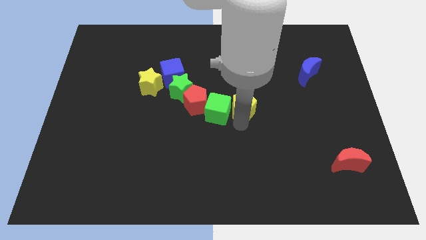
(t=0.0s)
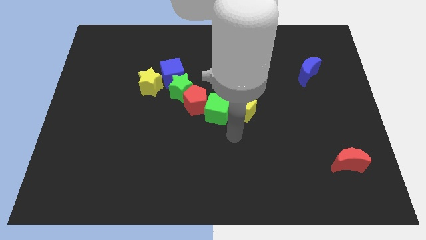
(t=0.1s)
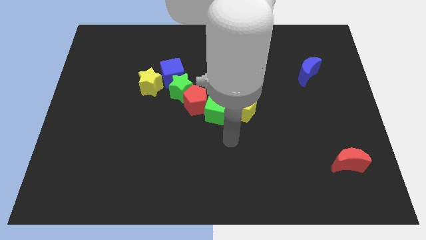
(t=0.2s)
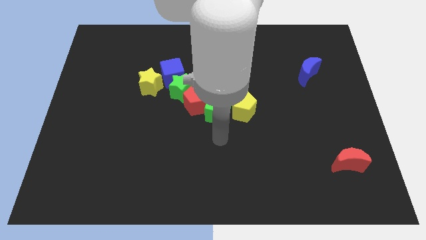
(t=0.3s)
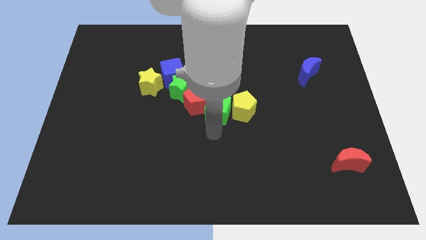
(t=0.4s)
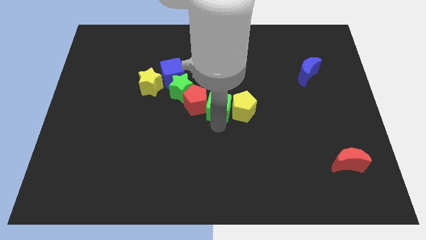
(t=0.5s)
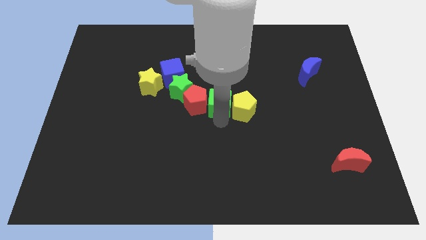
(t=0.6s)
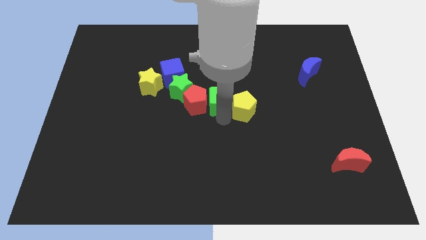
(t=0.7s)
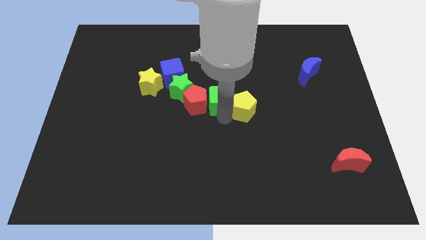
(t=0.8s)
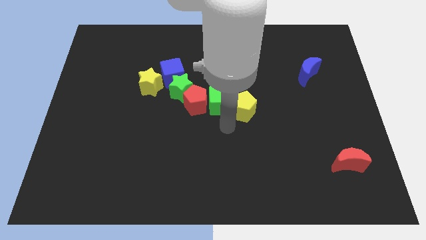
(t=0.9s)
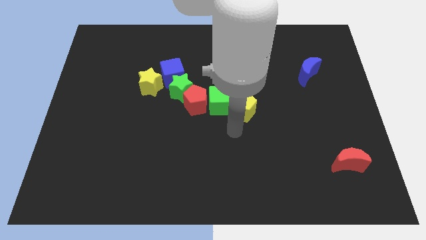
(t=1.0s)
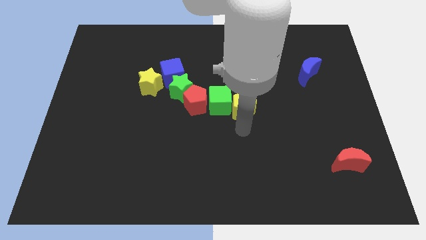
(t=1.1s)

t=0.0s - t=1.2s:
move the green cube slightly up

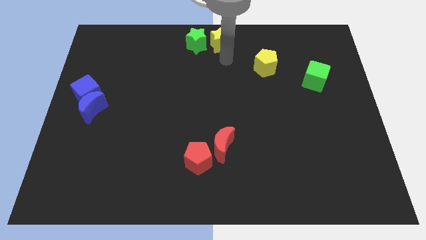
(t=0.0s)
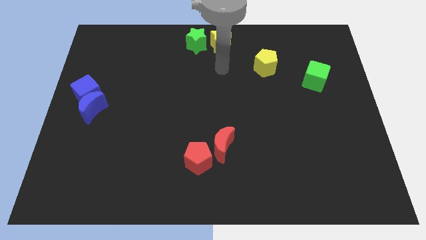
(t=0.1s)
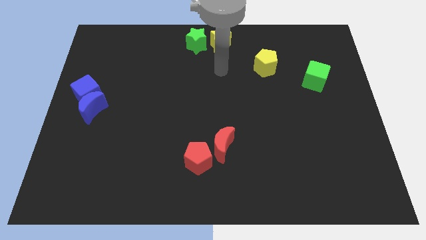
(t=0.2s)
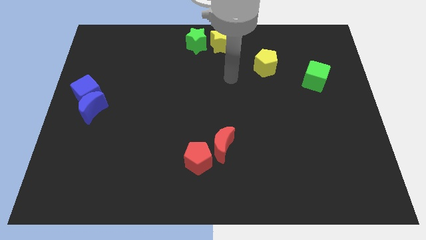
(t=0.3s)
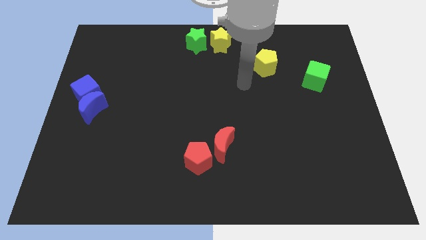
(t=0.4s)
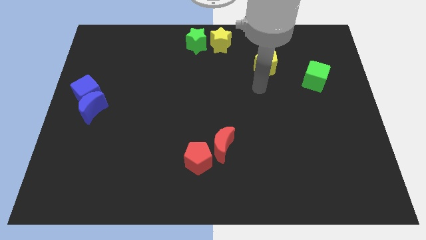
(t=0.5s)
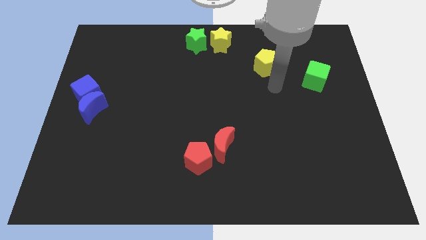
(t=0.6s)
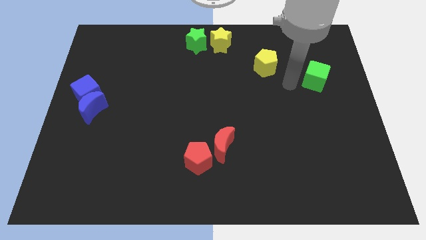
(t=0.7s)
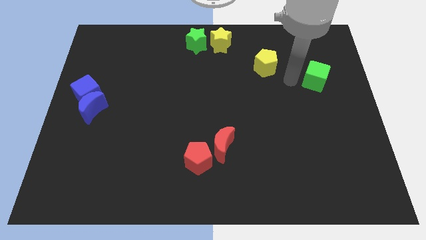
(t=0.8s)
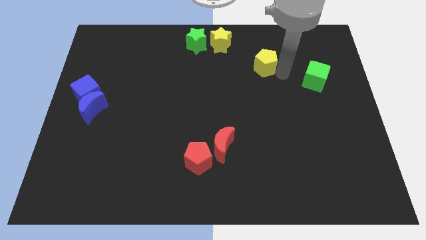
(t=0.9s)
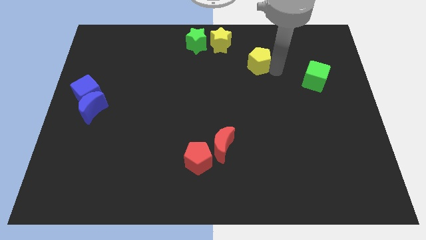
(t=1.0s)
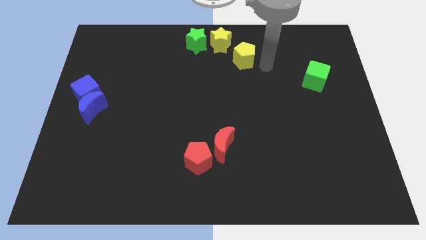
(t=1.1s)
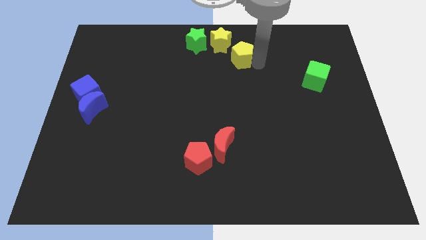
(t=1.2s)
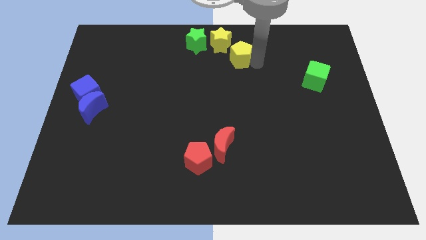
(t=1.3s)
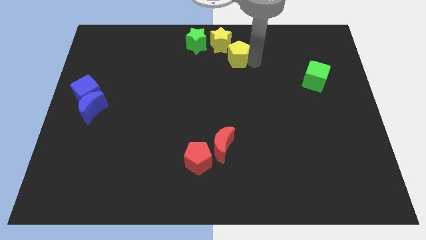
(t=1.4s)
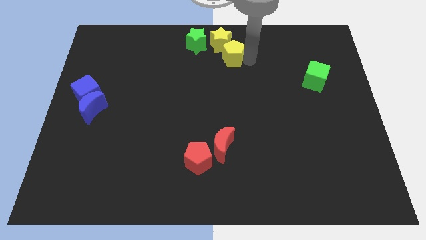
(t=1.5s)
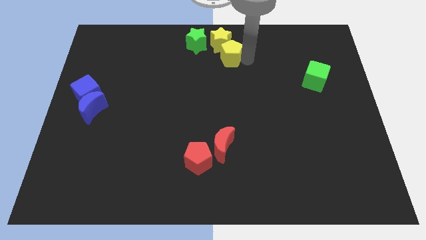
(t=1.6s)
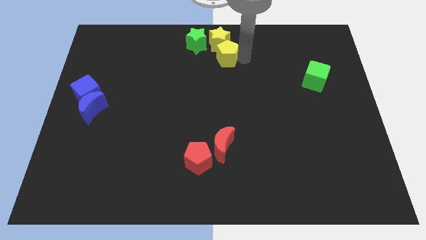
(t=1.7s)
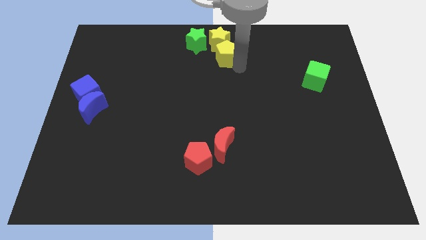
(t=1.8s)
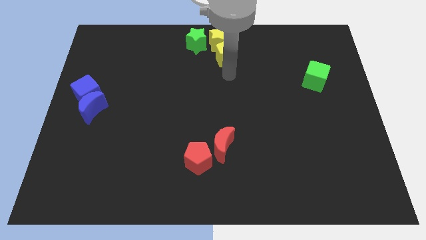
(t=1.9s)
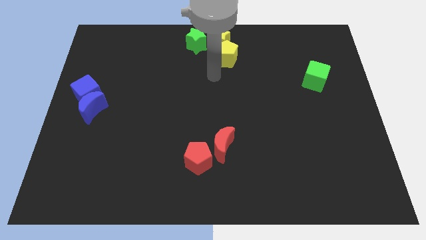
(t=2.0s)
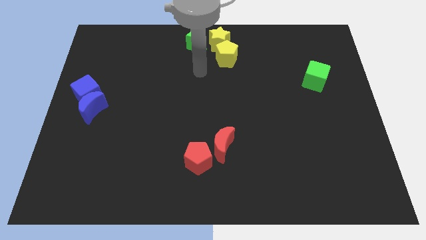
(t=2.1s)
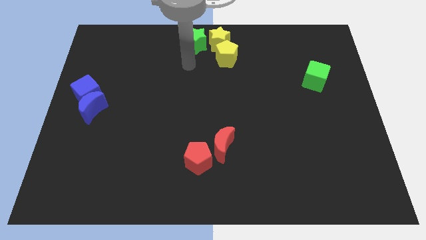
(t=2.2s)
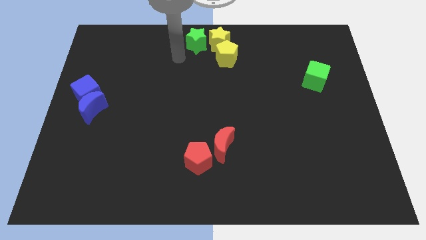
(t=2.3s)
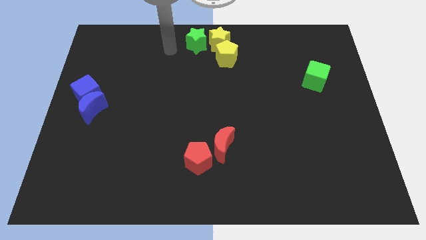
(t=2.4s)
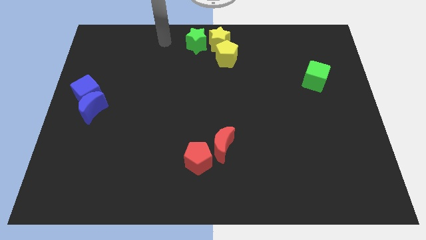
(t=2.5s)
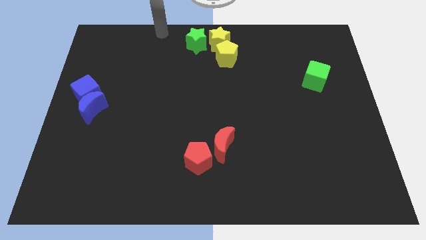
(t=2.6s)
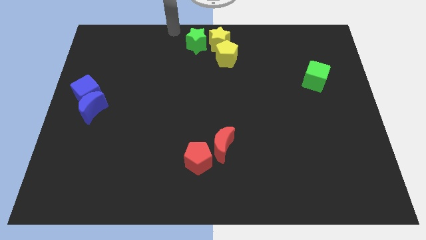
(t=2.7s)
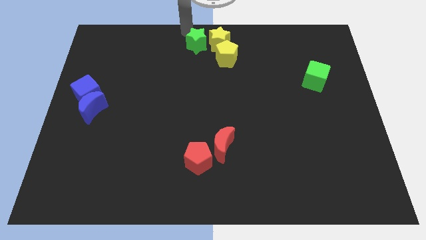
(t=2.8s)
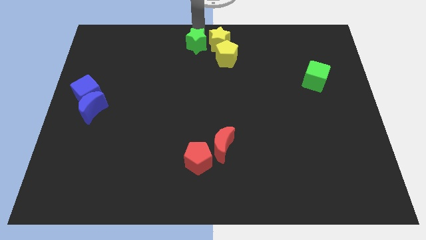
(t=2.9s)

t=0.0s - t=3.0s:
move the yellow pentagon below the yellow star

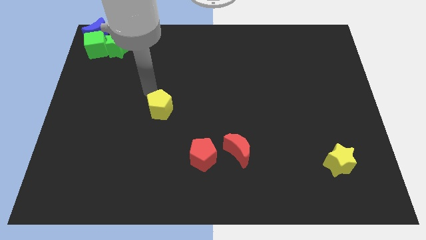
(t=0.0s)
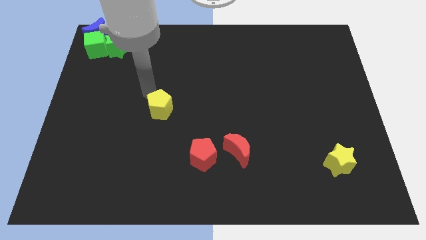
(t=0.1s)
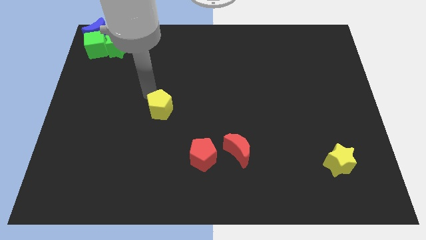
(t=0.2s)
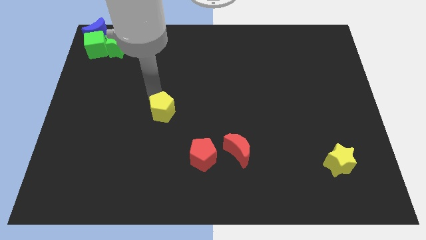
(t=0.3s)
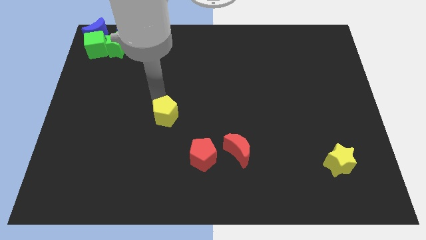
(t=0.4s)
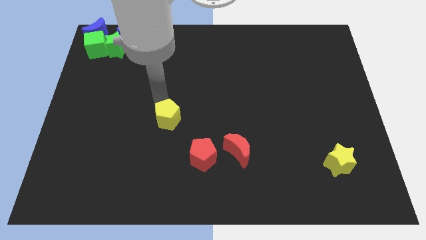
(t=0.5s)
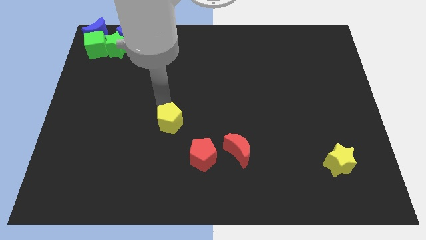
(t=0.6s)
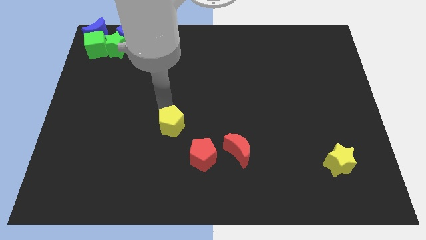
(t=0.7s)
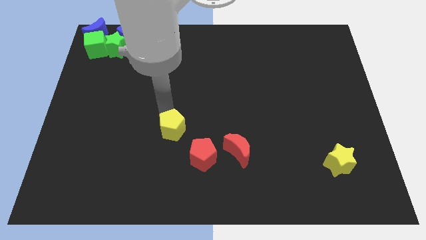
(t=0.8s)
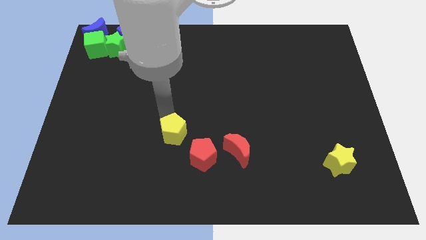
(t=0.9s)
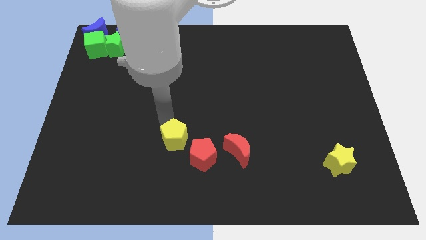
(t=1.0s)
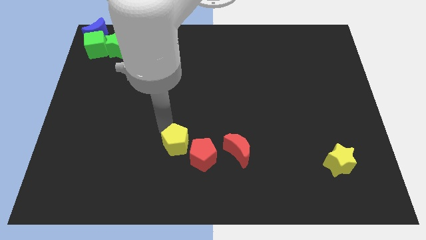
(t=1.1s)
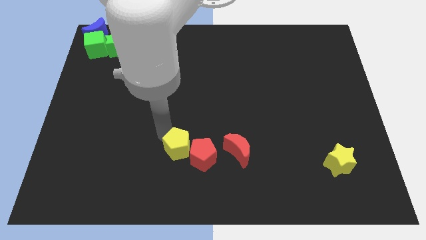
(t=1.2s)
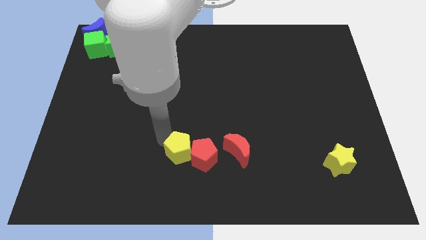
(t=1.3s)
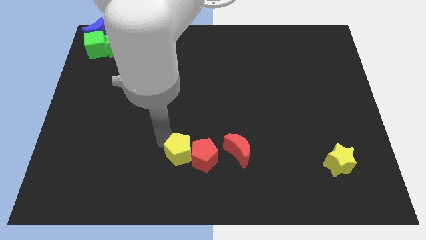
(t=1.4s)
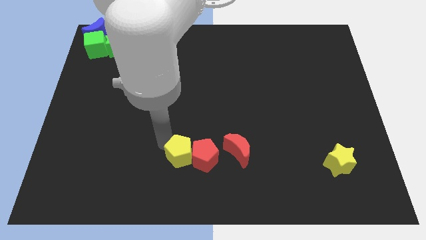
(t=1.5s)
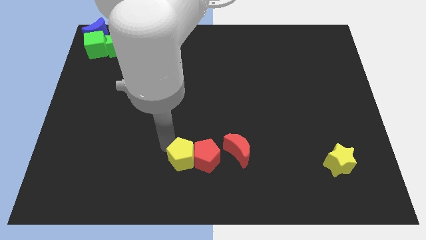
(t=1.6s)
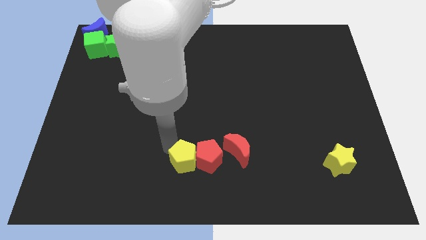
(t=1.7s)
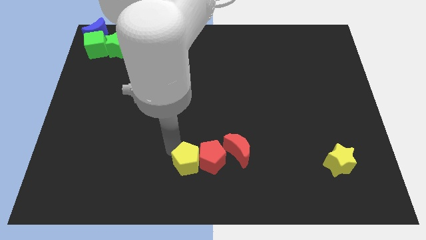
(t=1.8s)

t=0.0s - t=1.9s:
move the yellow pentagon towards the red pentagon

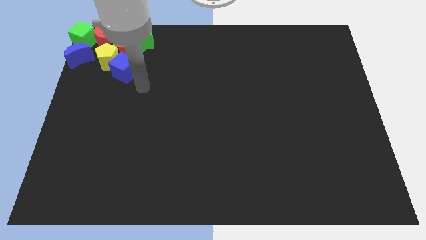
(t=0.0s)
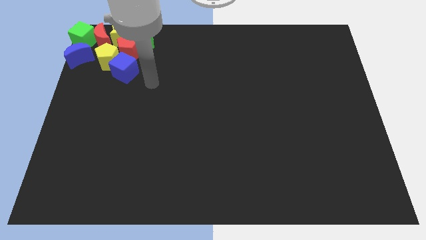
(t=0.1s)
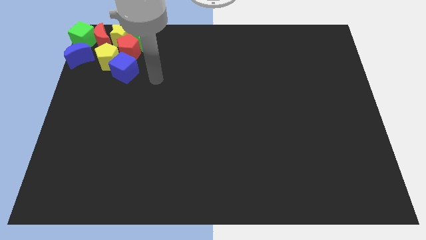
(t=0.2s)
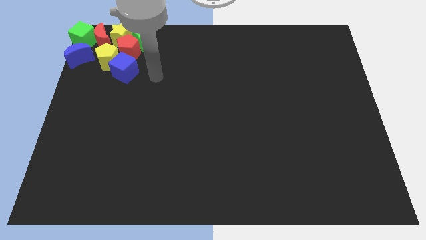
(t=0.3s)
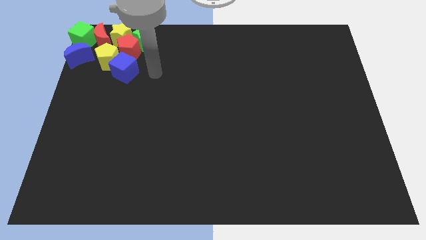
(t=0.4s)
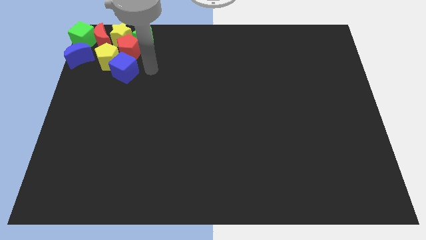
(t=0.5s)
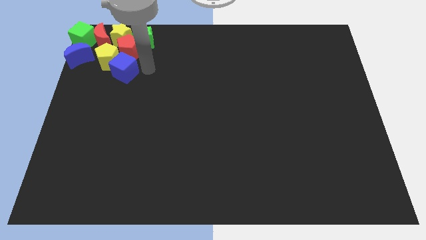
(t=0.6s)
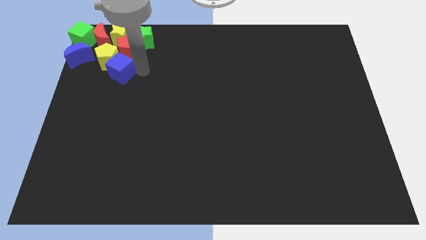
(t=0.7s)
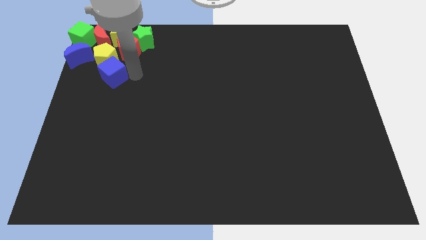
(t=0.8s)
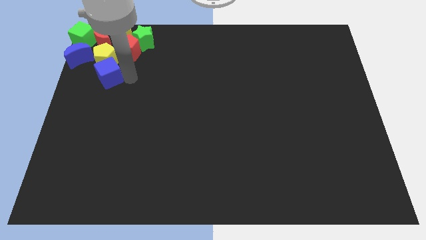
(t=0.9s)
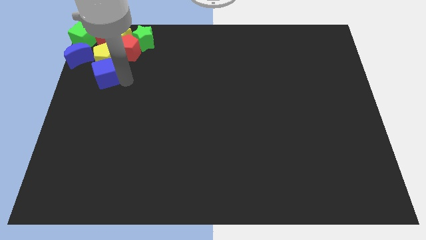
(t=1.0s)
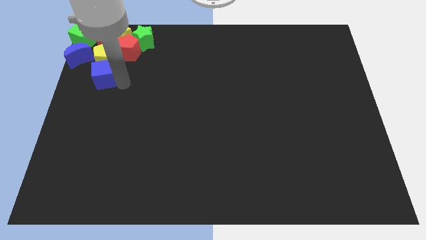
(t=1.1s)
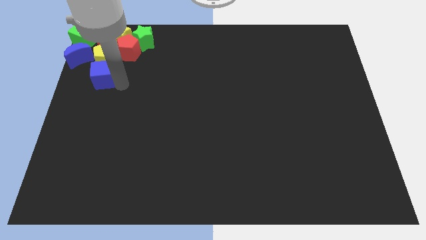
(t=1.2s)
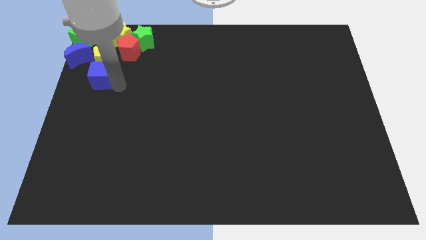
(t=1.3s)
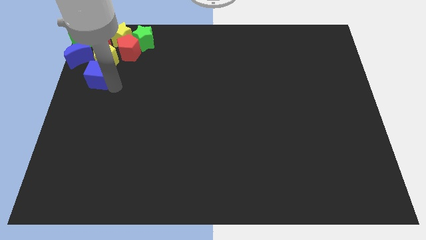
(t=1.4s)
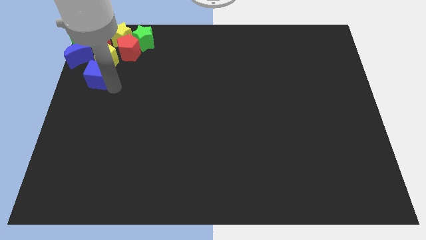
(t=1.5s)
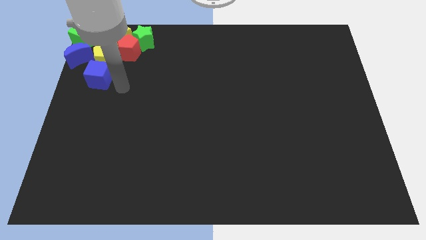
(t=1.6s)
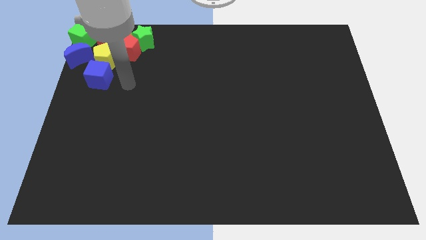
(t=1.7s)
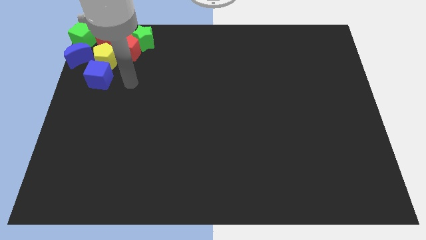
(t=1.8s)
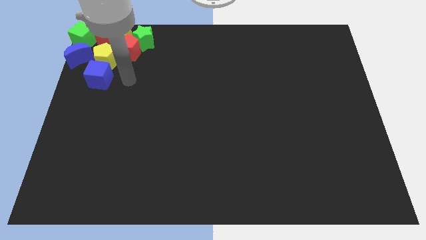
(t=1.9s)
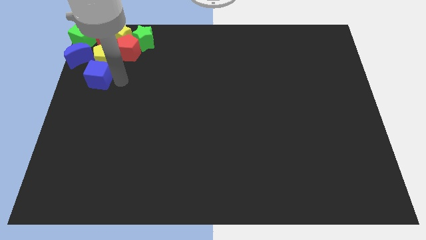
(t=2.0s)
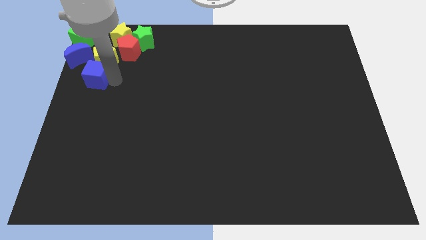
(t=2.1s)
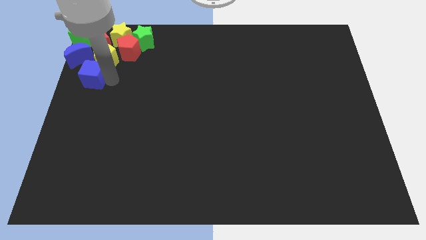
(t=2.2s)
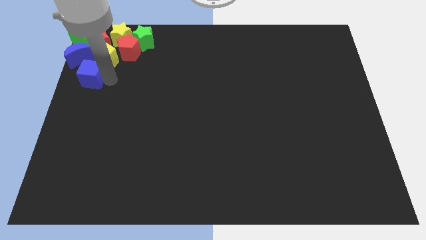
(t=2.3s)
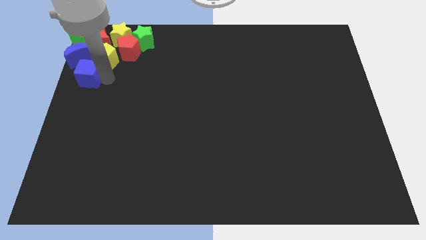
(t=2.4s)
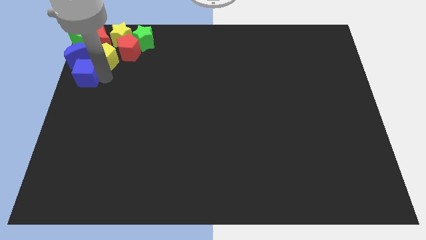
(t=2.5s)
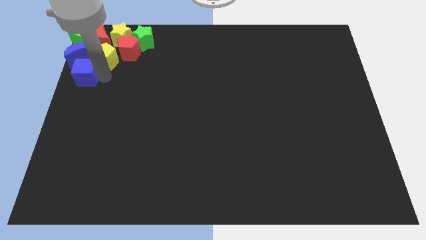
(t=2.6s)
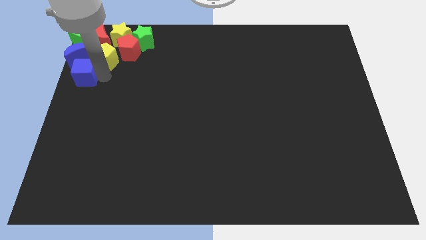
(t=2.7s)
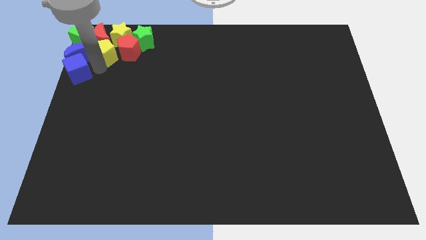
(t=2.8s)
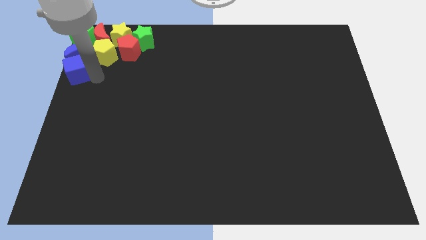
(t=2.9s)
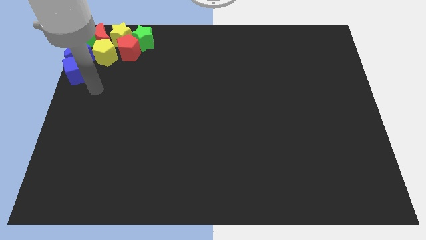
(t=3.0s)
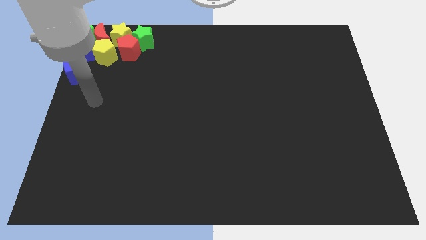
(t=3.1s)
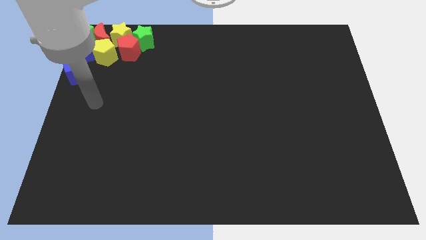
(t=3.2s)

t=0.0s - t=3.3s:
place the blue cube into blue crescent
